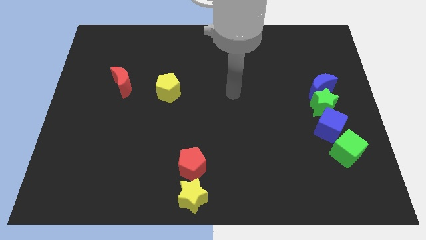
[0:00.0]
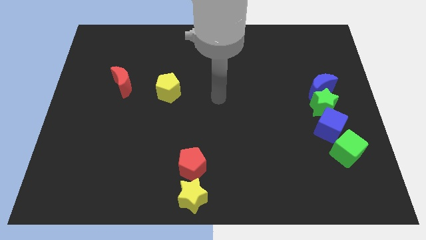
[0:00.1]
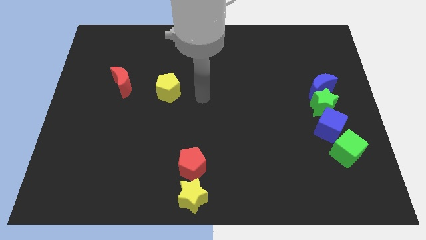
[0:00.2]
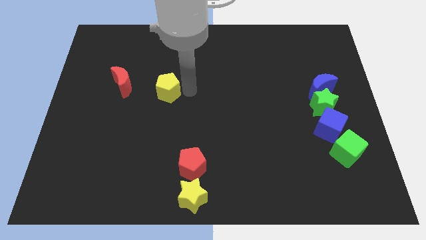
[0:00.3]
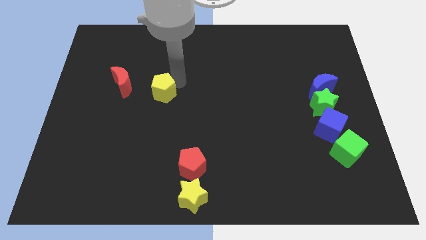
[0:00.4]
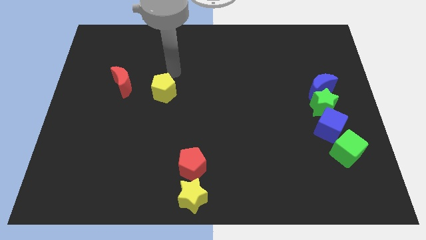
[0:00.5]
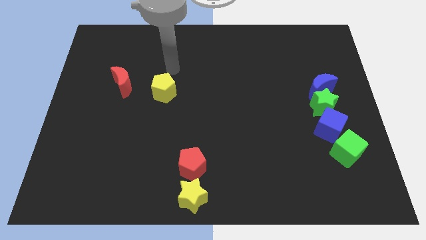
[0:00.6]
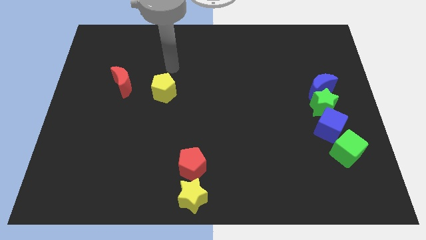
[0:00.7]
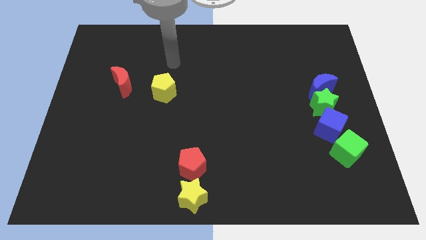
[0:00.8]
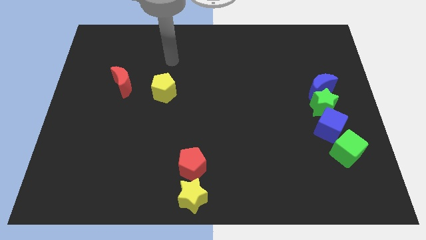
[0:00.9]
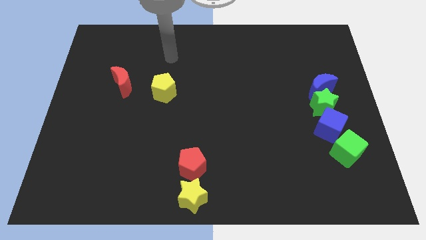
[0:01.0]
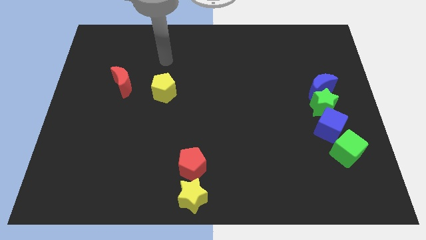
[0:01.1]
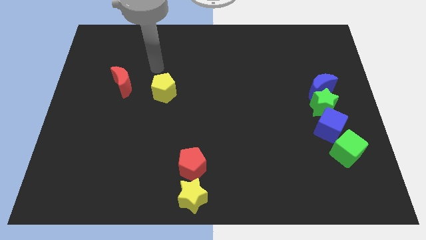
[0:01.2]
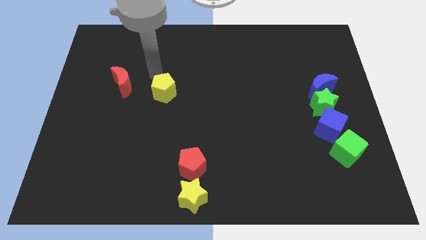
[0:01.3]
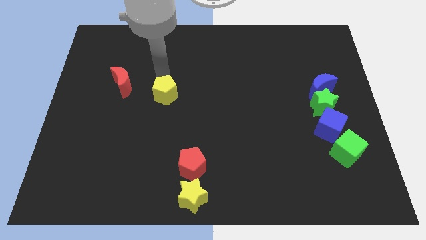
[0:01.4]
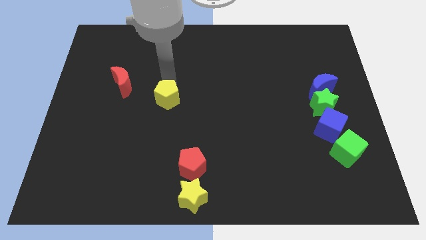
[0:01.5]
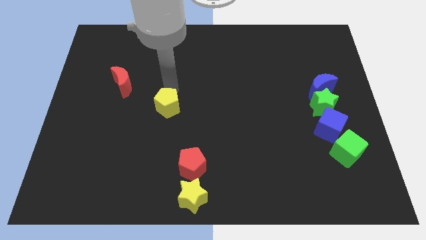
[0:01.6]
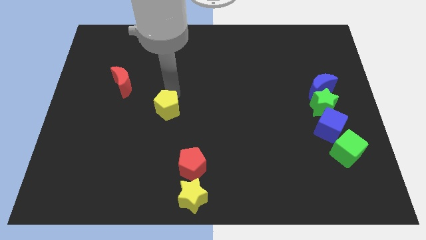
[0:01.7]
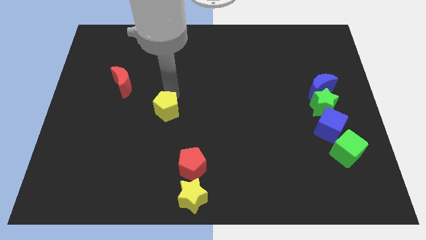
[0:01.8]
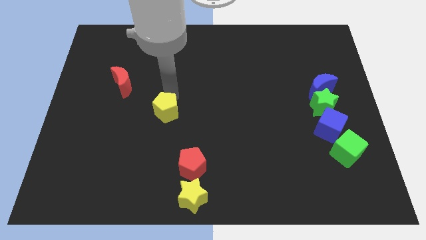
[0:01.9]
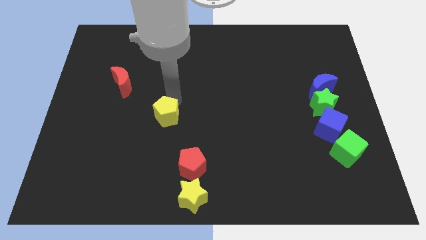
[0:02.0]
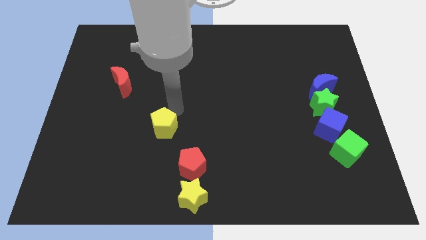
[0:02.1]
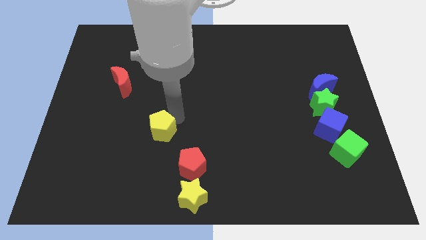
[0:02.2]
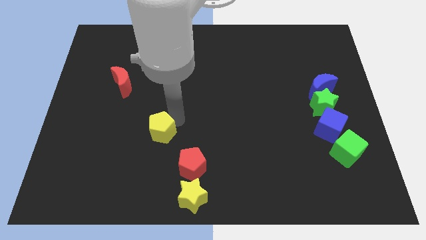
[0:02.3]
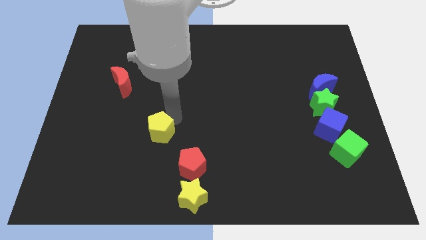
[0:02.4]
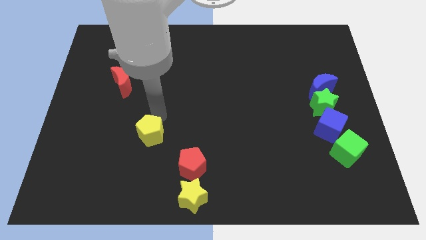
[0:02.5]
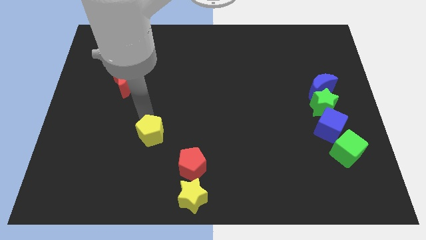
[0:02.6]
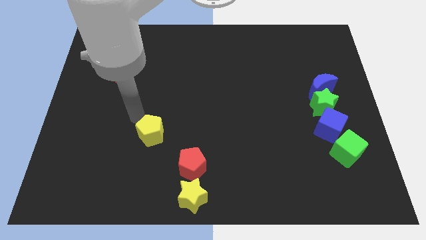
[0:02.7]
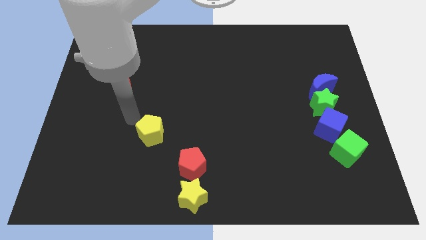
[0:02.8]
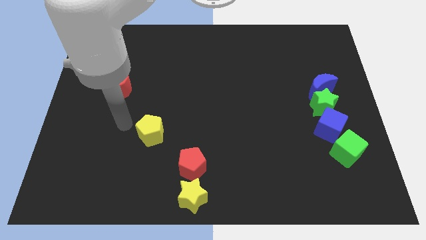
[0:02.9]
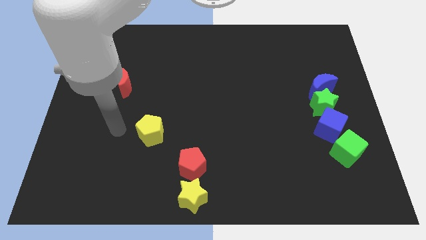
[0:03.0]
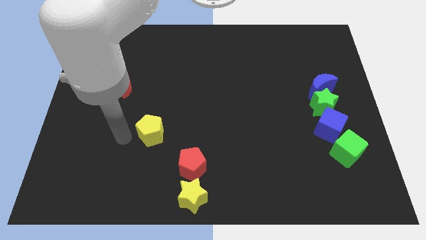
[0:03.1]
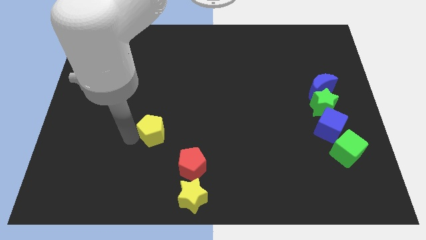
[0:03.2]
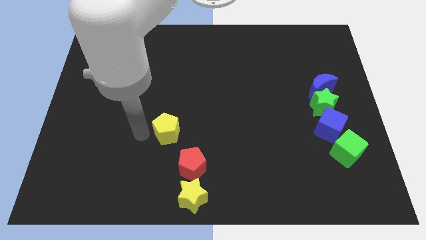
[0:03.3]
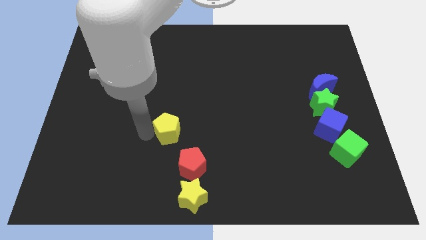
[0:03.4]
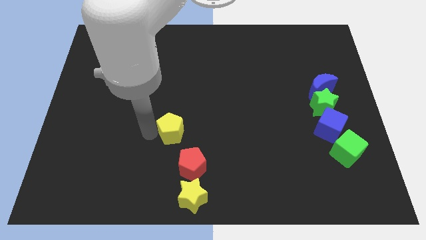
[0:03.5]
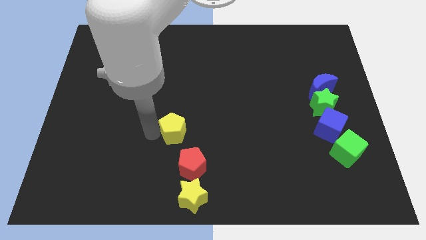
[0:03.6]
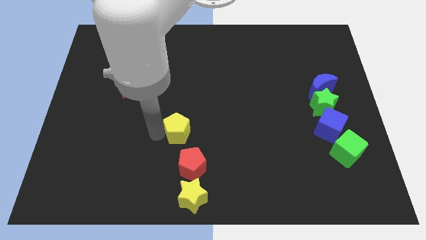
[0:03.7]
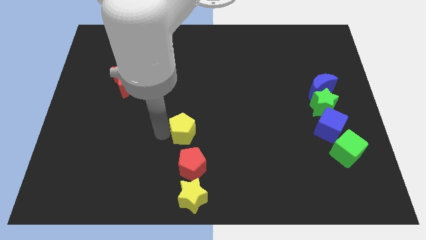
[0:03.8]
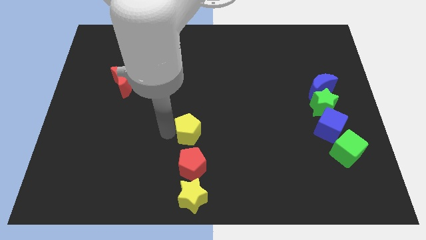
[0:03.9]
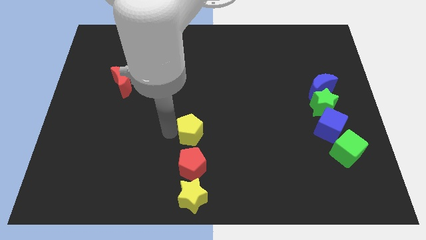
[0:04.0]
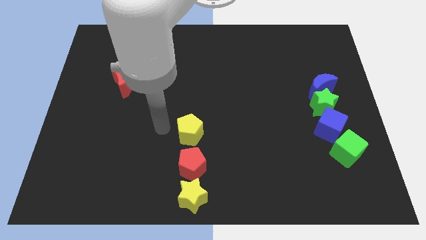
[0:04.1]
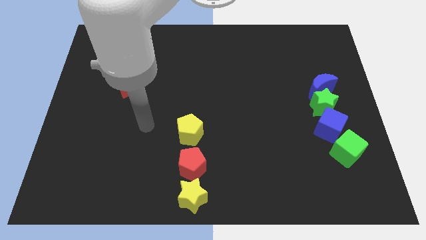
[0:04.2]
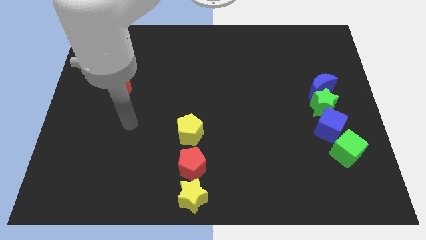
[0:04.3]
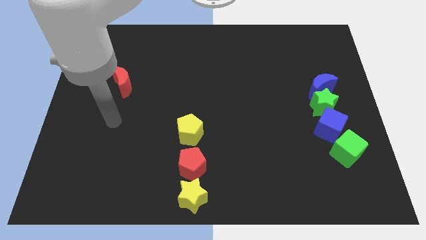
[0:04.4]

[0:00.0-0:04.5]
move the yellow pentagon to the top of the red pentagon

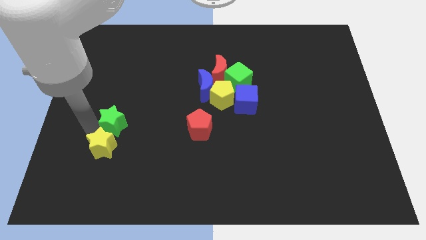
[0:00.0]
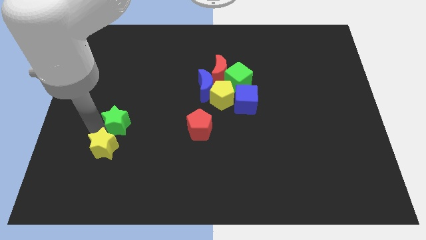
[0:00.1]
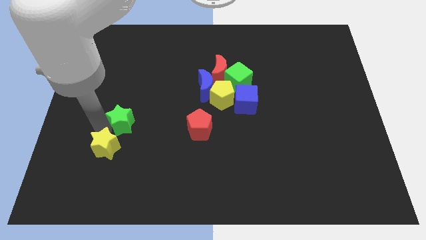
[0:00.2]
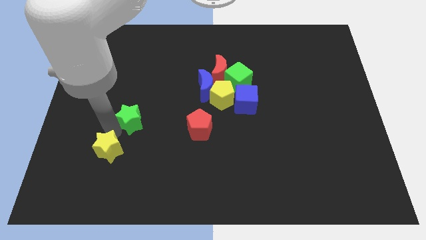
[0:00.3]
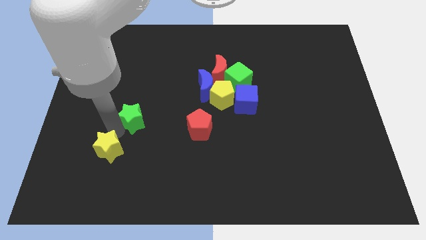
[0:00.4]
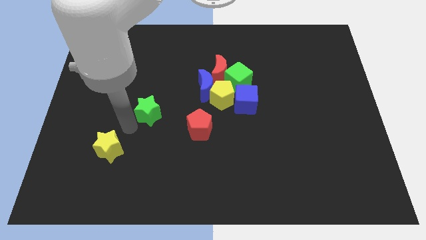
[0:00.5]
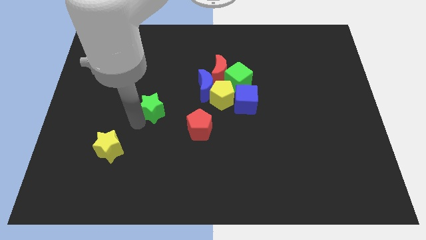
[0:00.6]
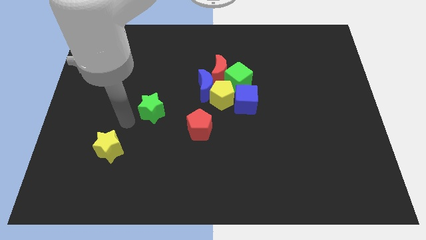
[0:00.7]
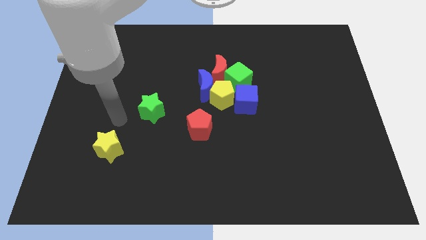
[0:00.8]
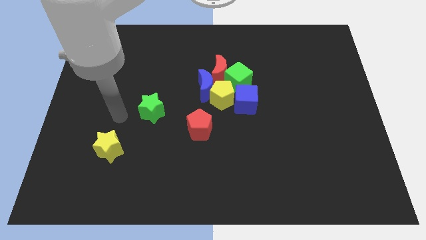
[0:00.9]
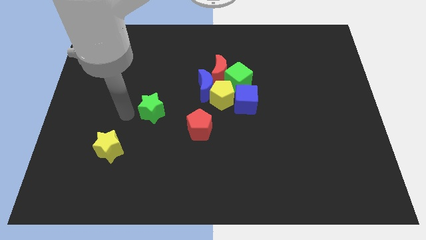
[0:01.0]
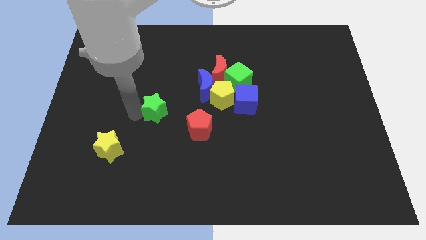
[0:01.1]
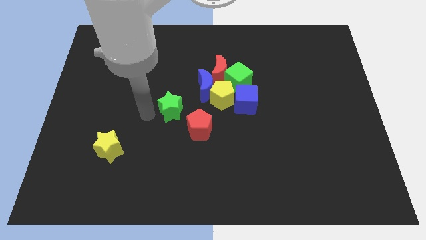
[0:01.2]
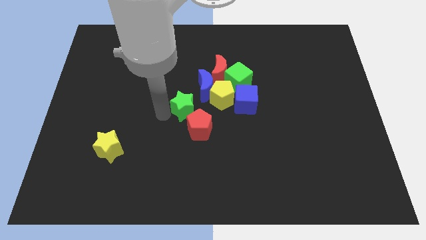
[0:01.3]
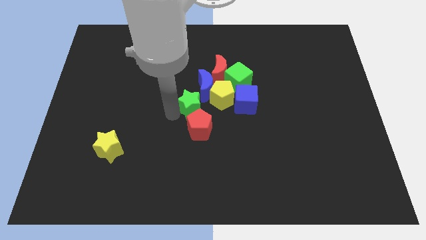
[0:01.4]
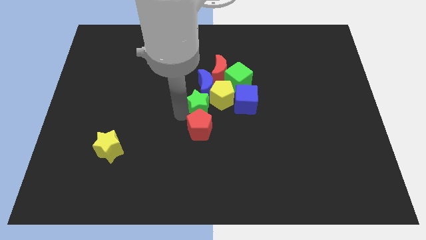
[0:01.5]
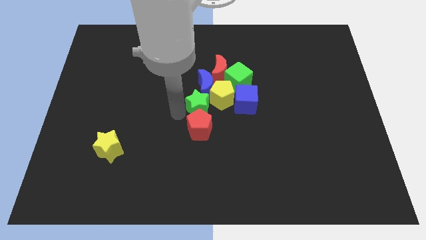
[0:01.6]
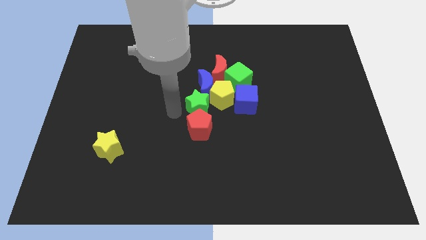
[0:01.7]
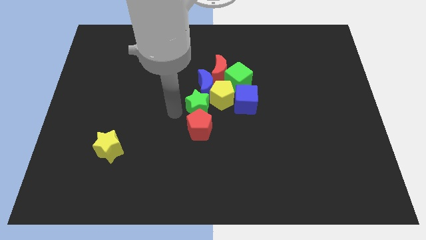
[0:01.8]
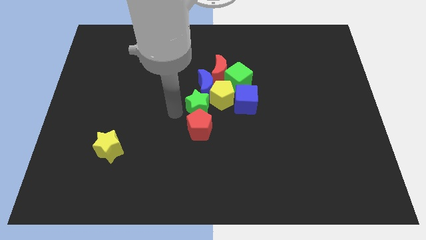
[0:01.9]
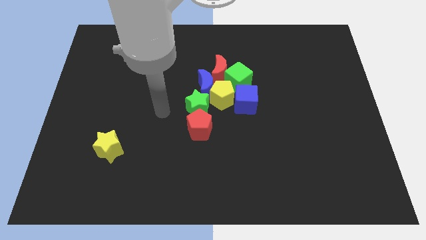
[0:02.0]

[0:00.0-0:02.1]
push the green star to the top side of the red pentagon

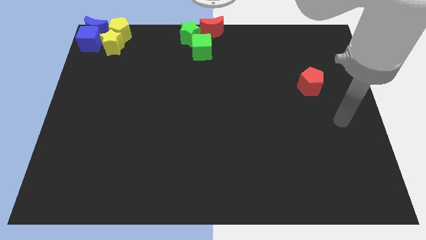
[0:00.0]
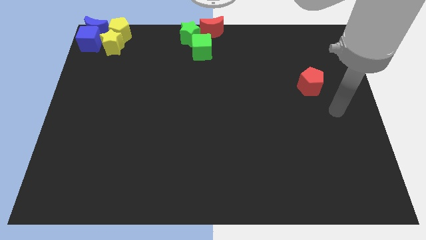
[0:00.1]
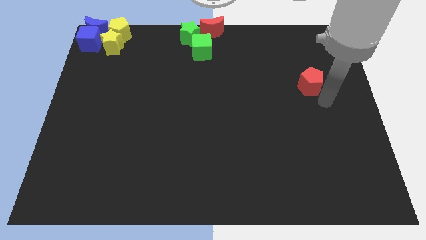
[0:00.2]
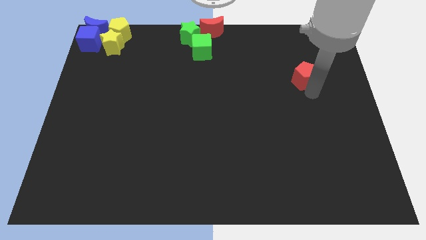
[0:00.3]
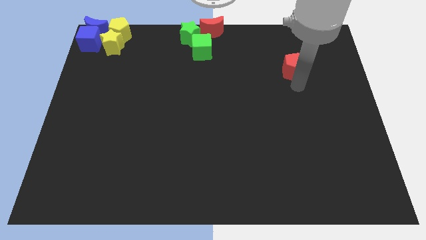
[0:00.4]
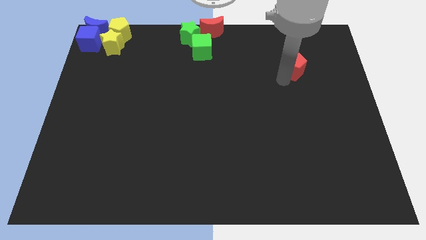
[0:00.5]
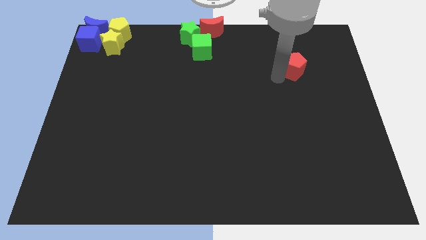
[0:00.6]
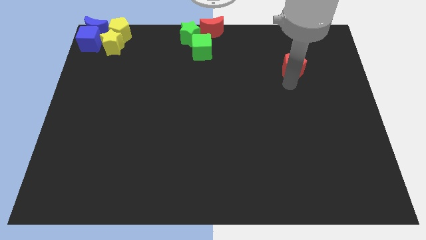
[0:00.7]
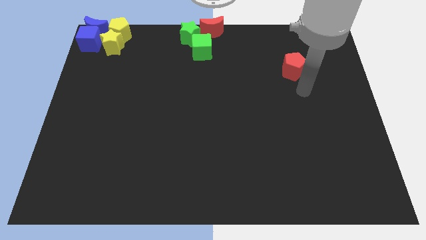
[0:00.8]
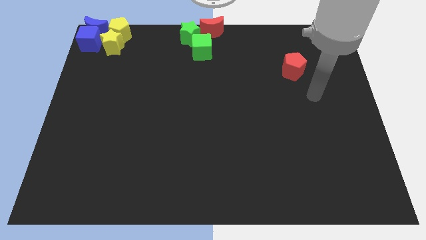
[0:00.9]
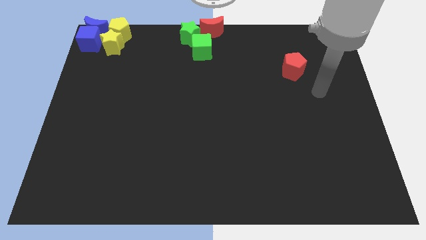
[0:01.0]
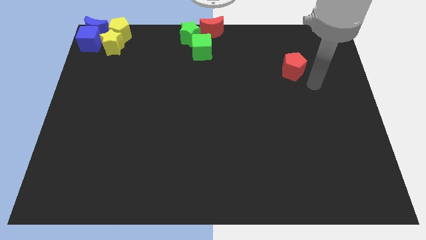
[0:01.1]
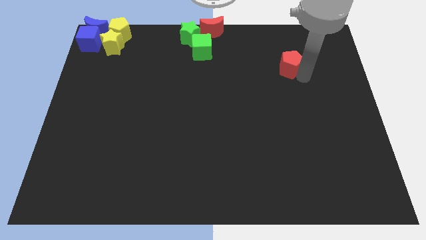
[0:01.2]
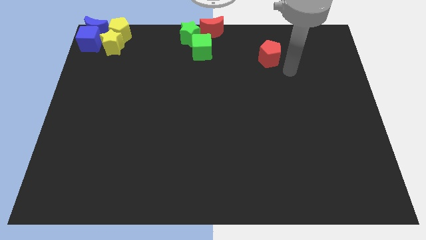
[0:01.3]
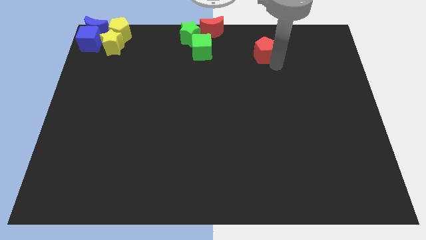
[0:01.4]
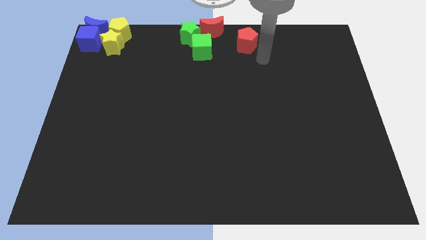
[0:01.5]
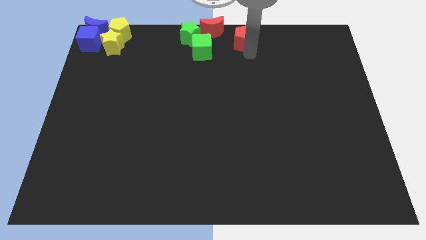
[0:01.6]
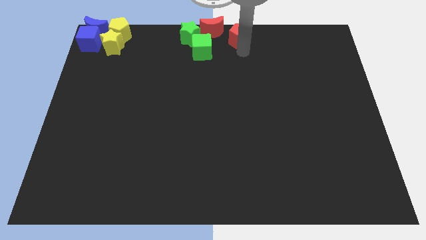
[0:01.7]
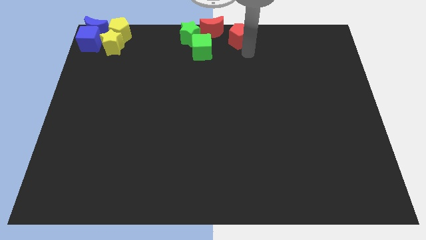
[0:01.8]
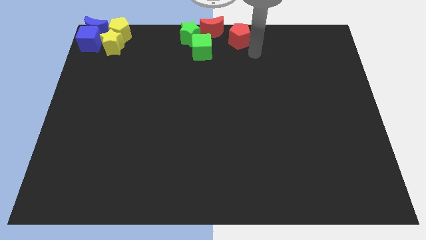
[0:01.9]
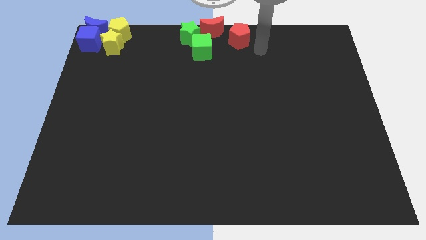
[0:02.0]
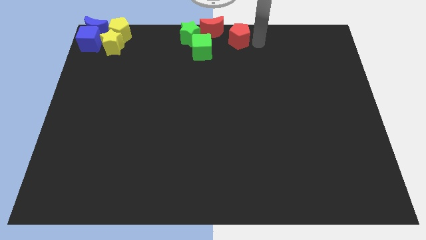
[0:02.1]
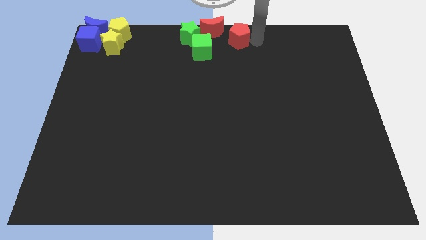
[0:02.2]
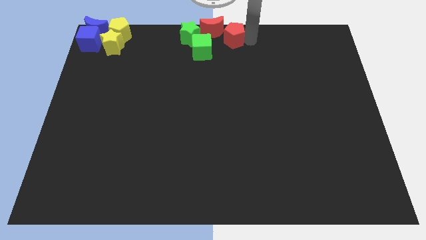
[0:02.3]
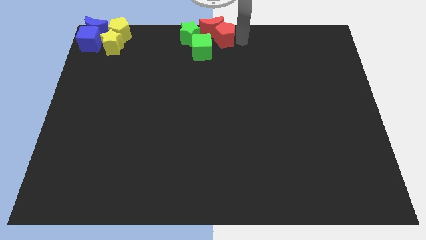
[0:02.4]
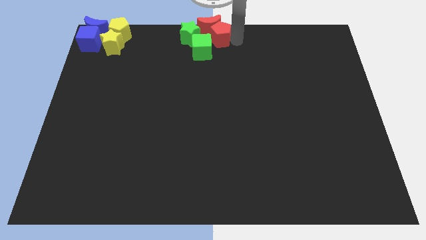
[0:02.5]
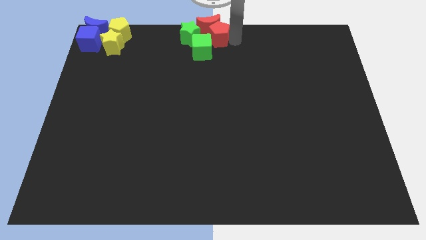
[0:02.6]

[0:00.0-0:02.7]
push the red pentagon to the bottom right of the red crescent
